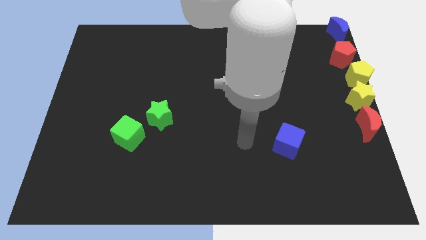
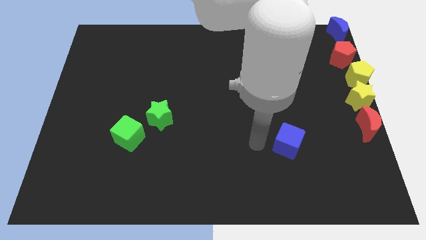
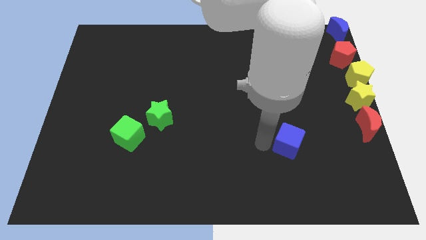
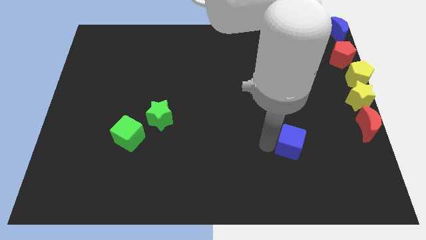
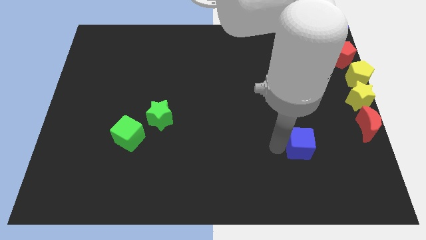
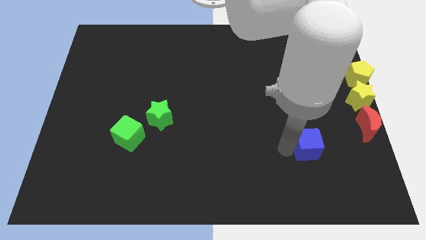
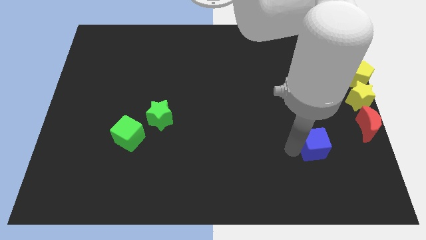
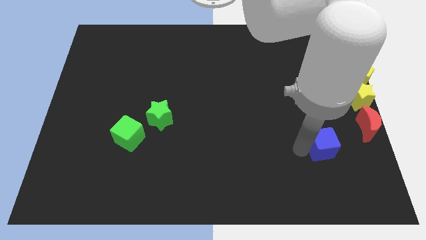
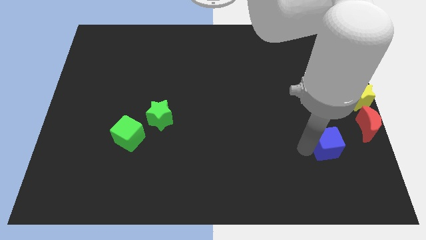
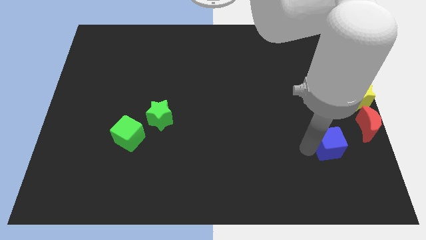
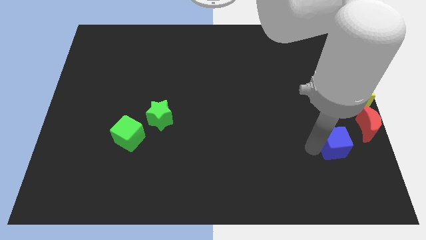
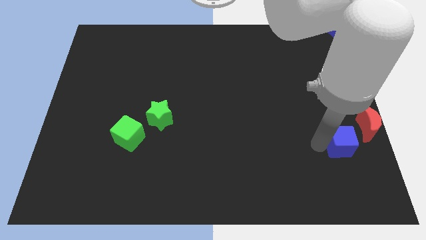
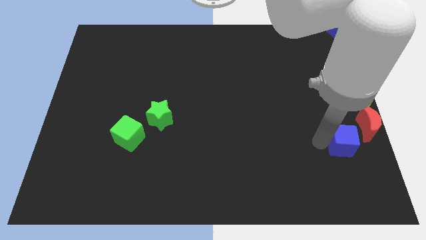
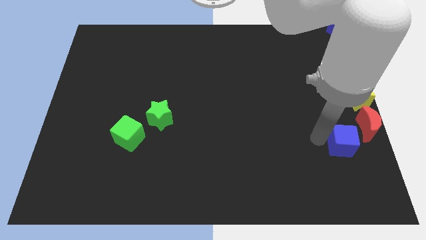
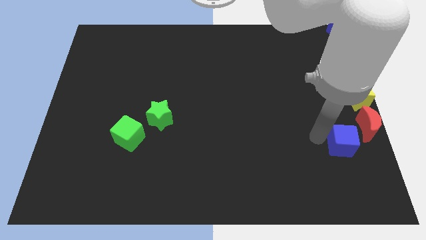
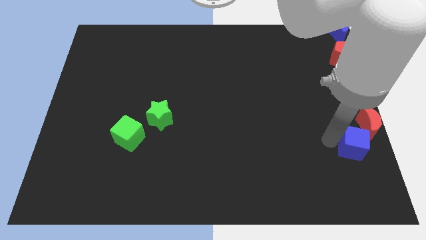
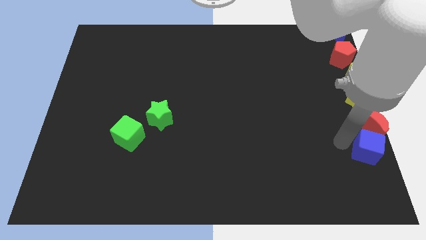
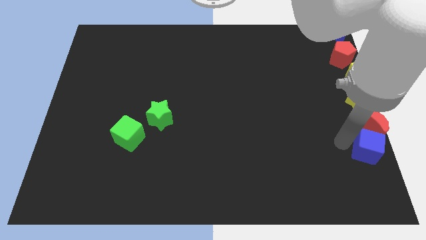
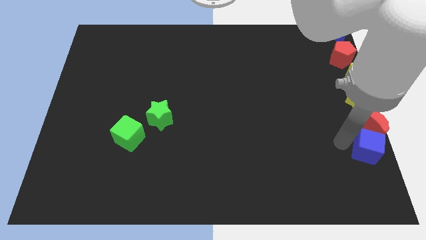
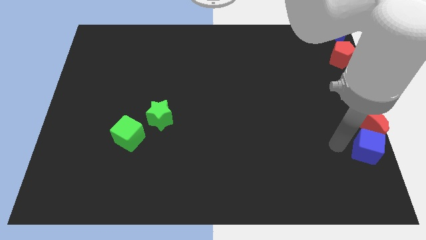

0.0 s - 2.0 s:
place the blue cube below the red crescent

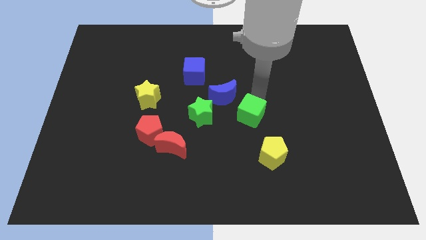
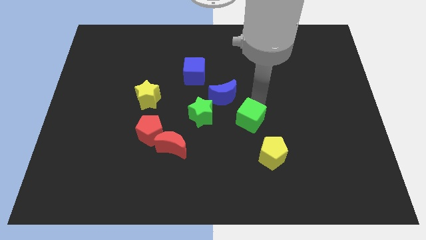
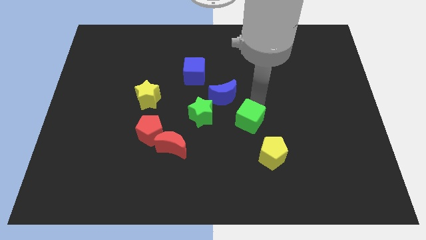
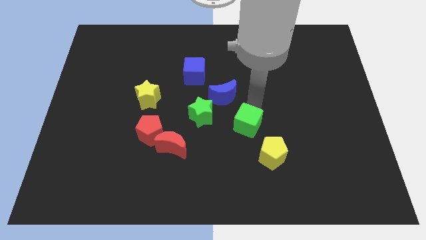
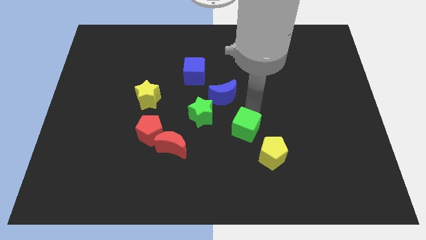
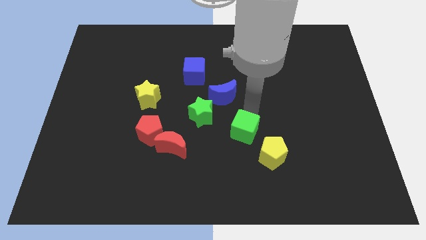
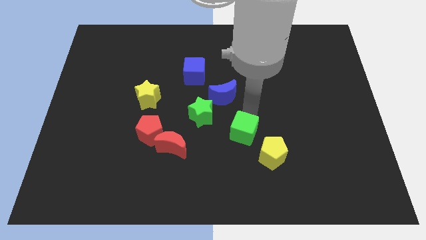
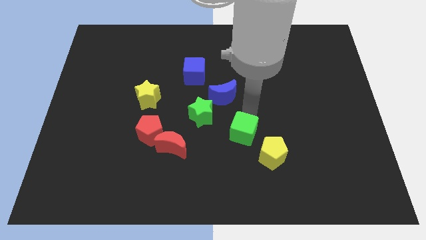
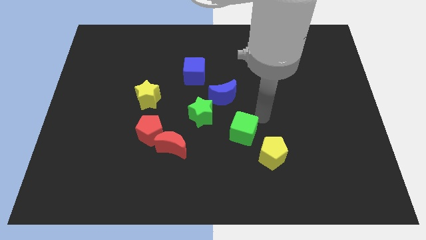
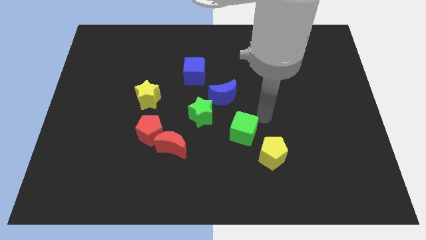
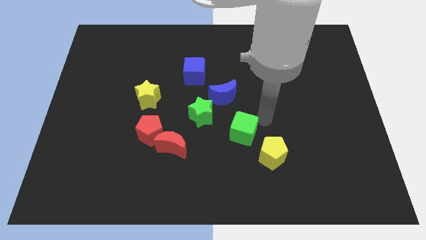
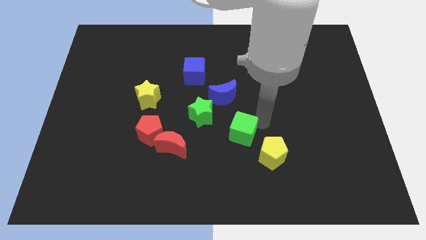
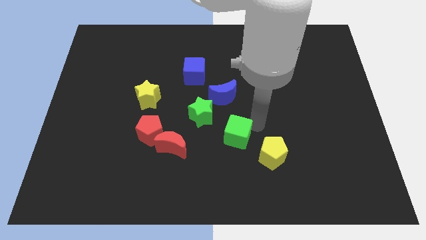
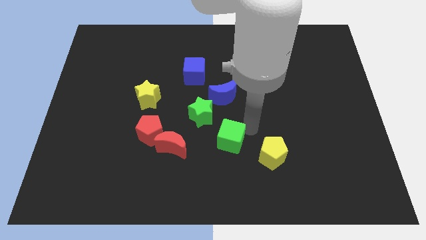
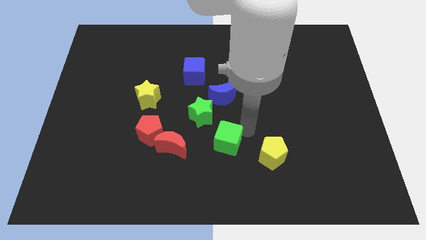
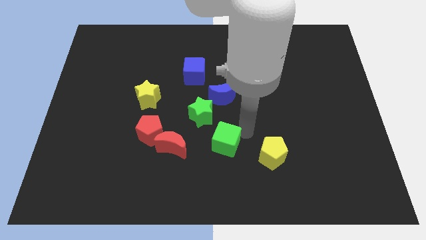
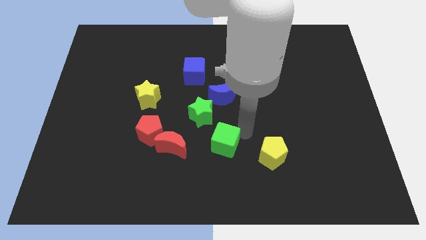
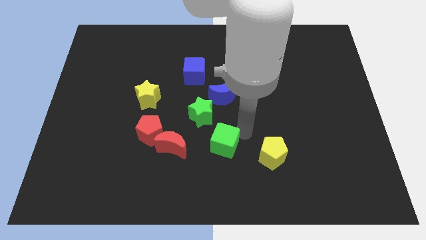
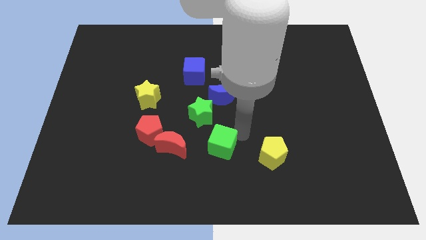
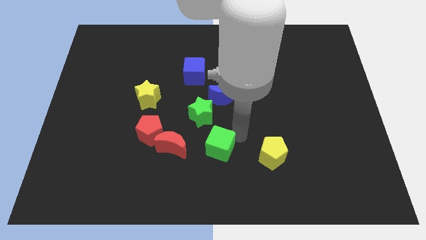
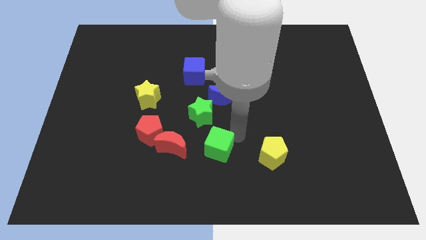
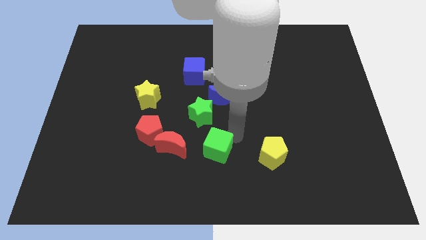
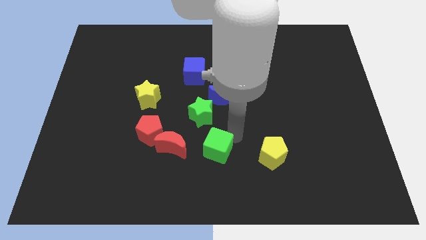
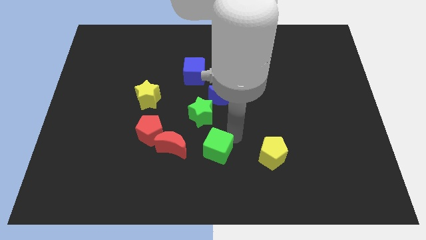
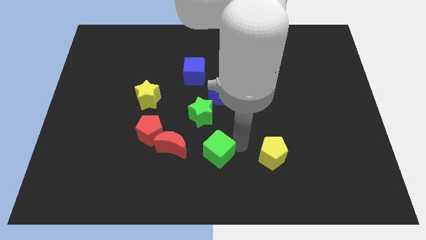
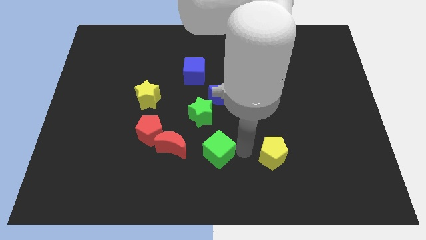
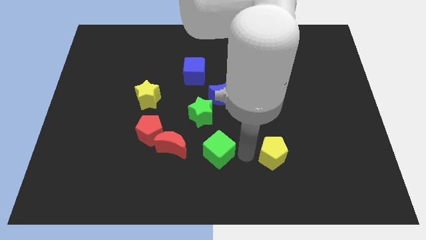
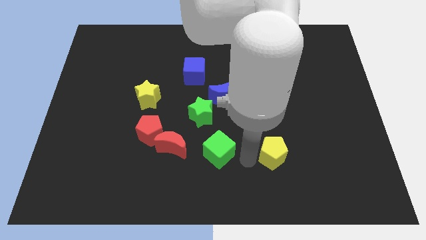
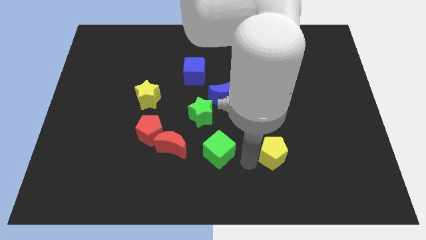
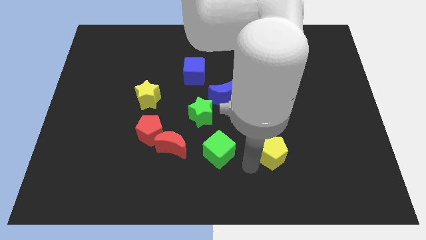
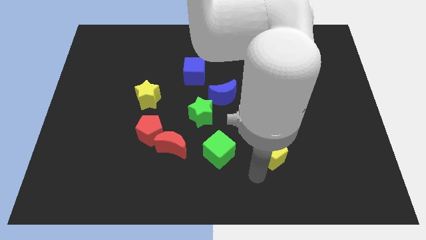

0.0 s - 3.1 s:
move the green cube right of the red moon

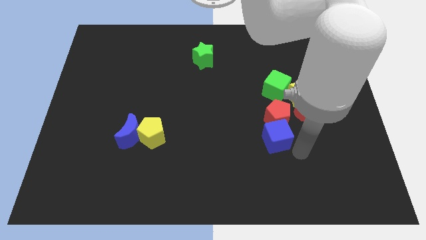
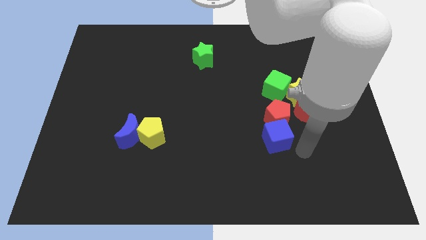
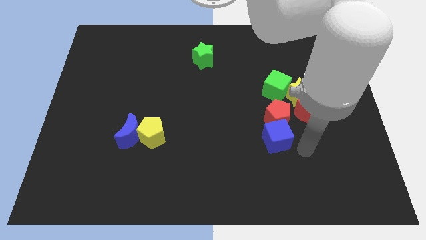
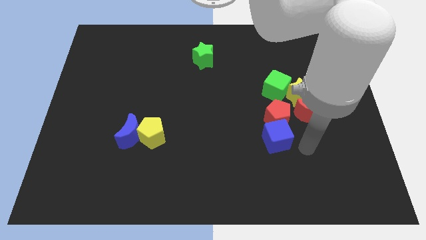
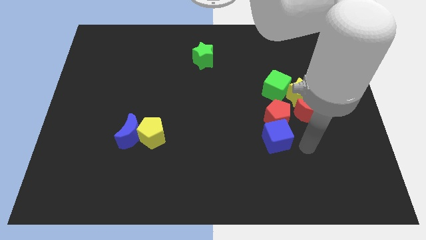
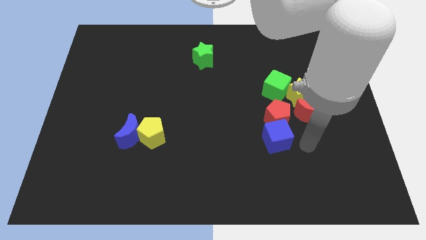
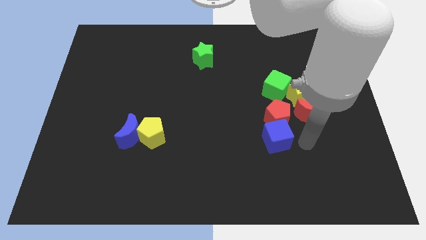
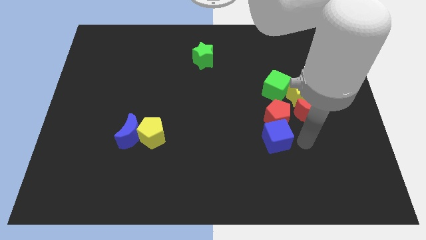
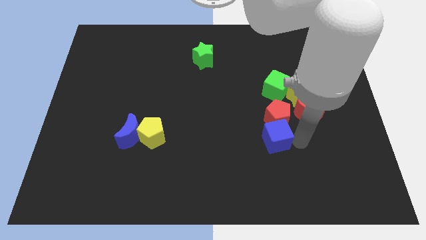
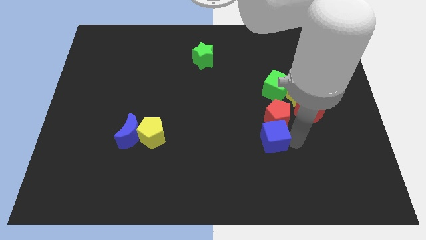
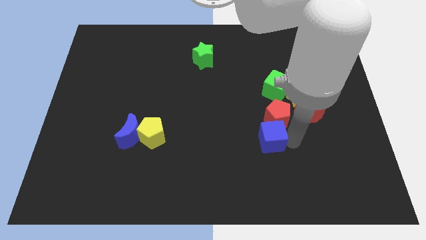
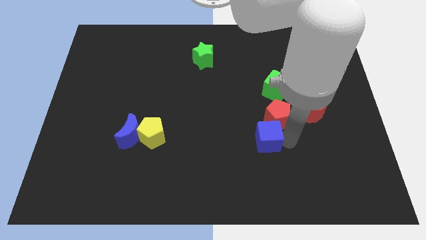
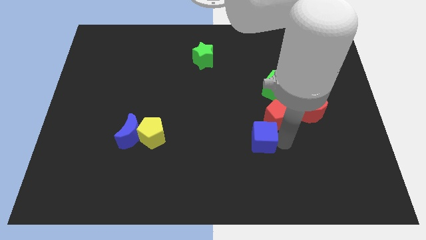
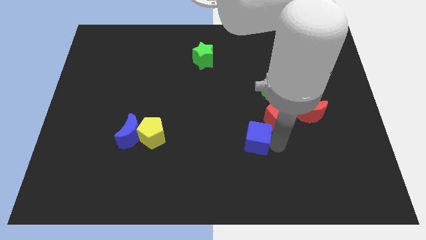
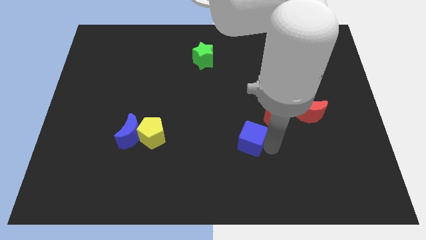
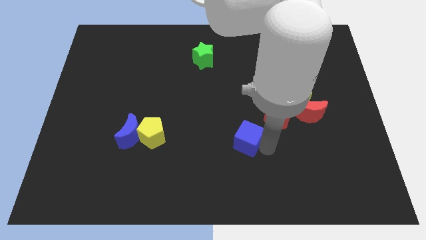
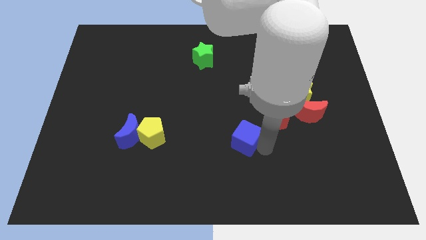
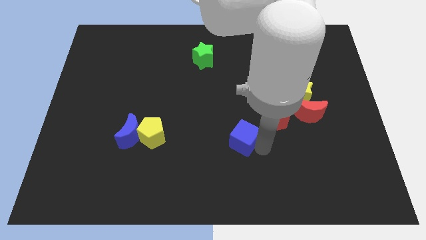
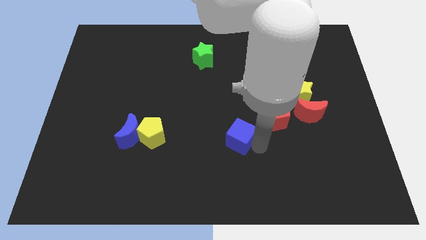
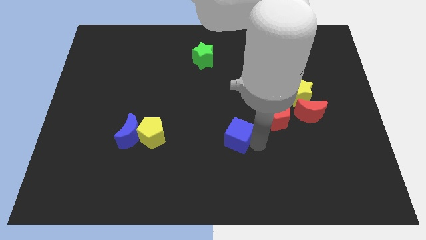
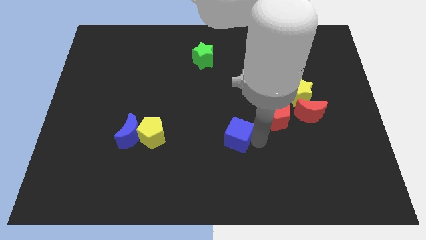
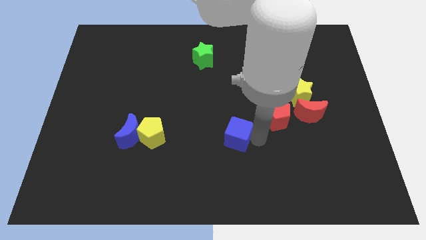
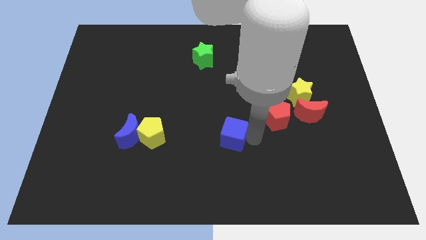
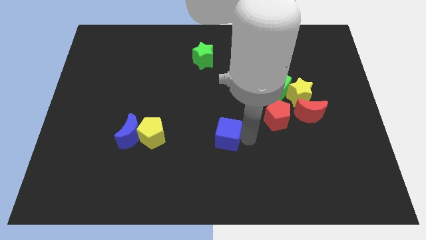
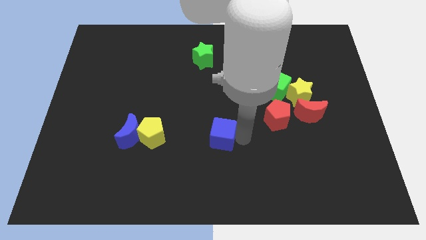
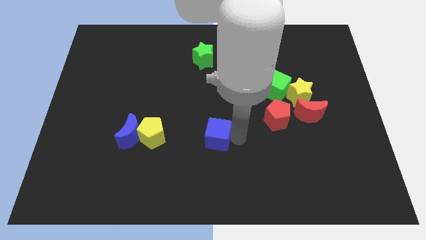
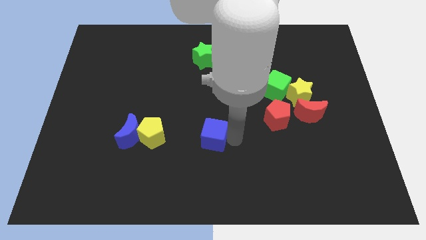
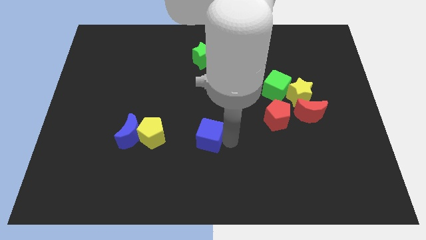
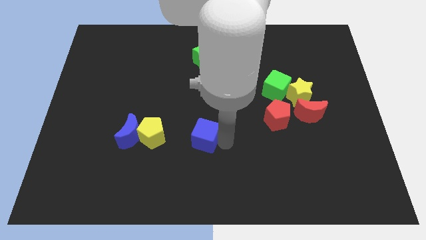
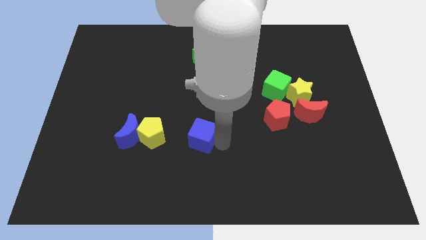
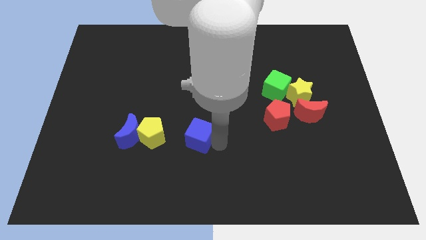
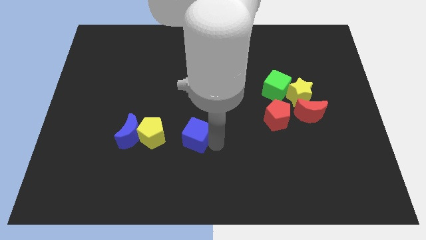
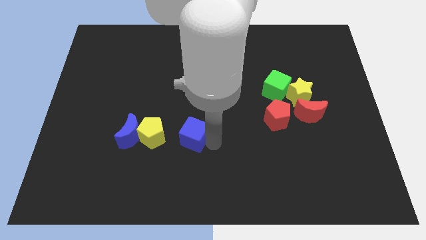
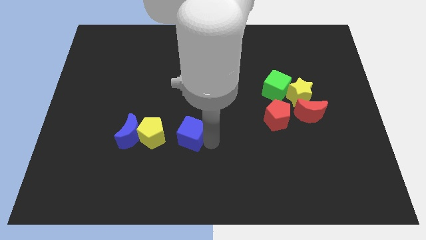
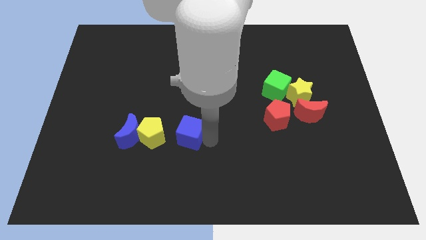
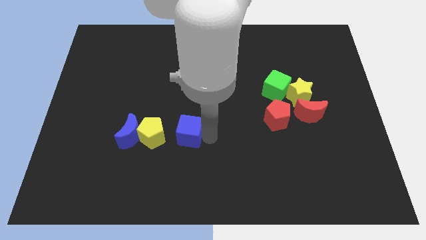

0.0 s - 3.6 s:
move blue cube to the right of yellow pentagon

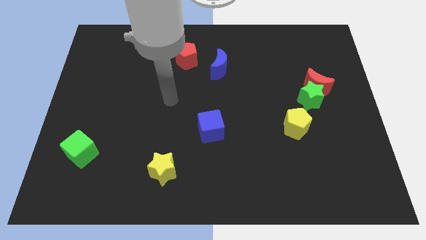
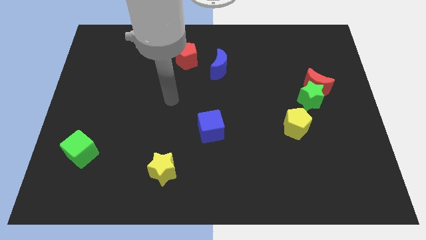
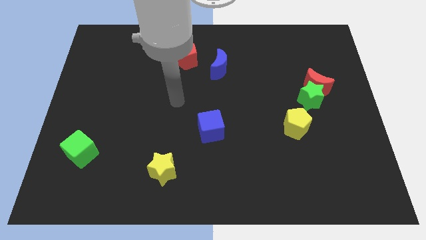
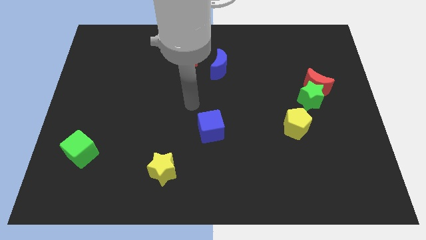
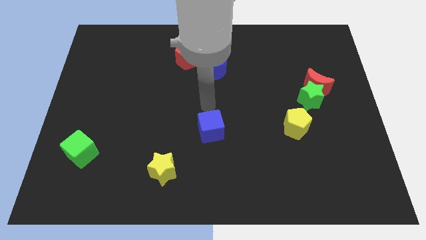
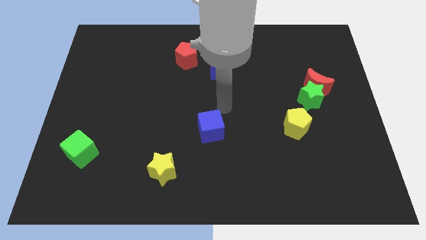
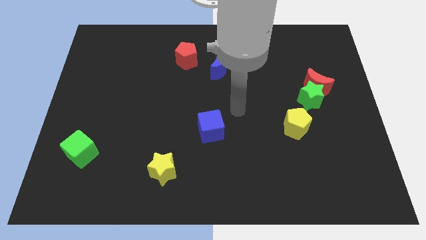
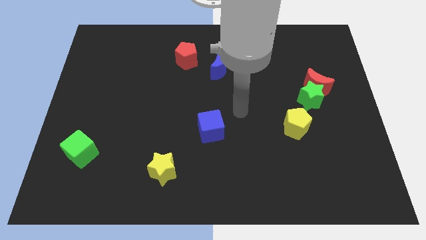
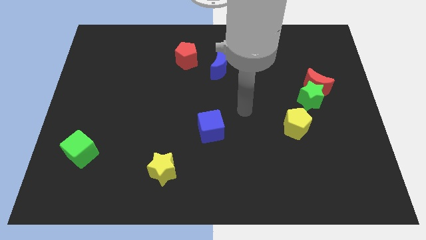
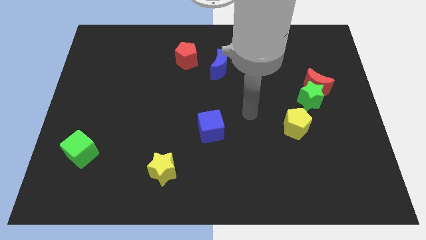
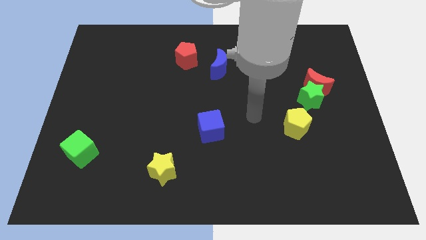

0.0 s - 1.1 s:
place your hand in between yellow pentagon and blue cube
